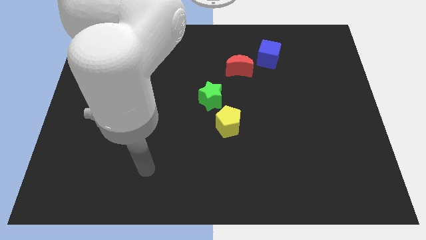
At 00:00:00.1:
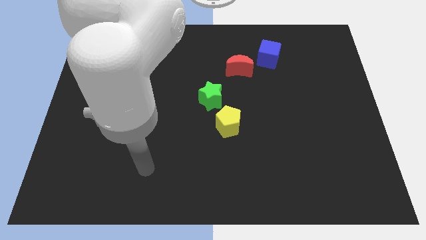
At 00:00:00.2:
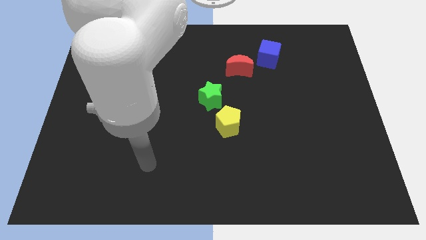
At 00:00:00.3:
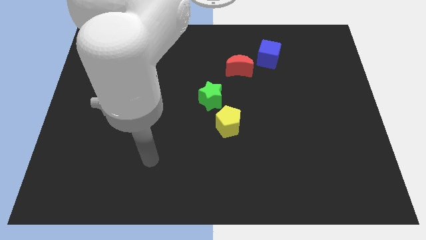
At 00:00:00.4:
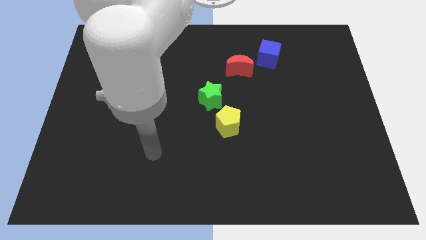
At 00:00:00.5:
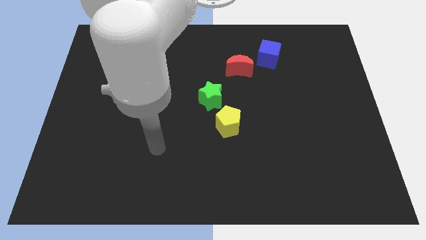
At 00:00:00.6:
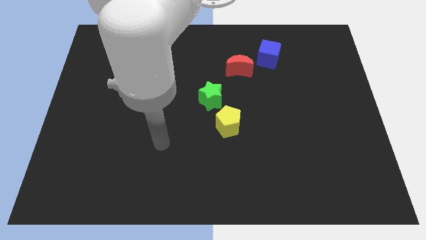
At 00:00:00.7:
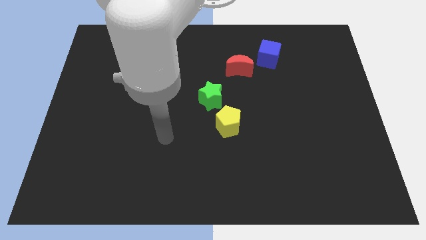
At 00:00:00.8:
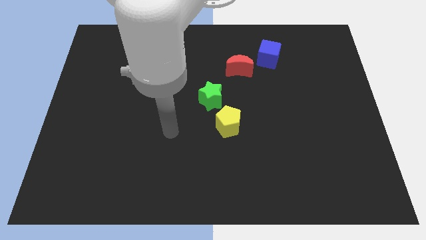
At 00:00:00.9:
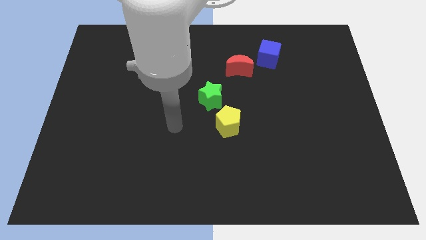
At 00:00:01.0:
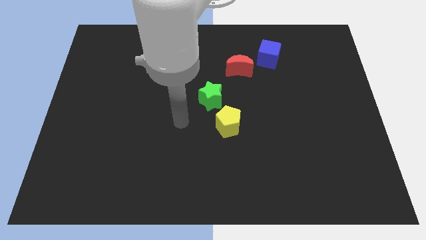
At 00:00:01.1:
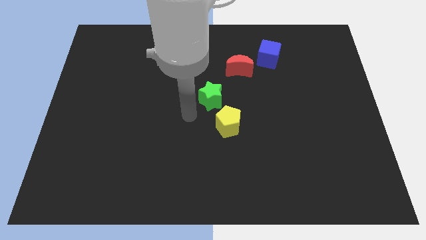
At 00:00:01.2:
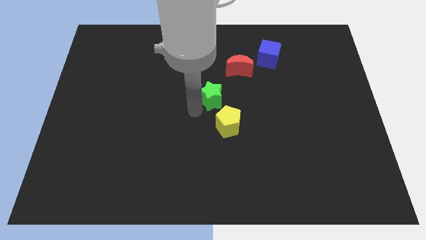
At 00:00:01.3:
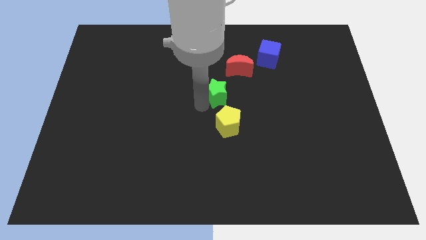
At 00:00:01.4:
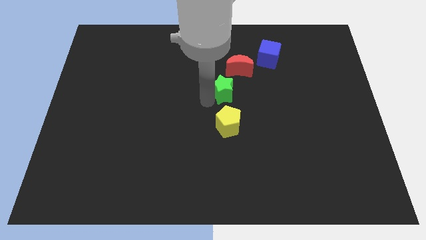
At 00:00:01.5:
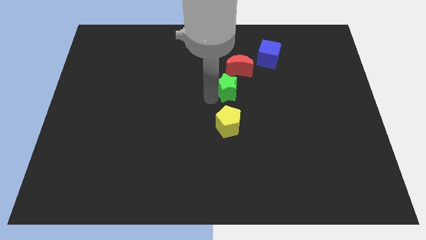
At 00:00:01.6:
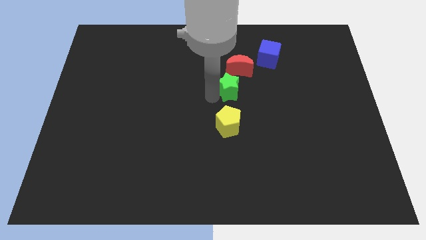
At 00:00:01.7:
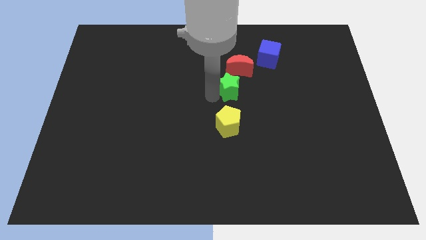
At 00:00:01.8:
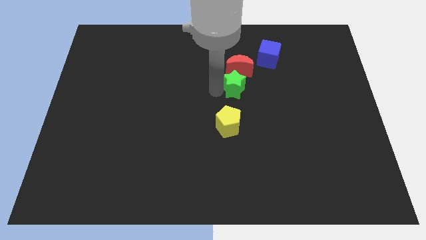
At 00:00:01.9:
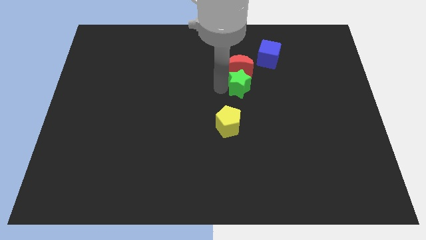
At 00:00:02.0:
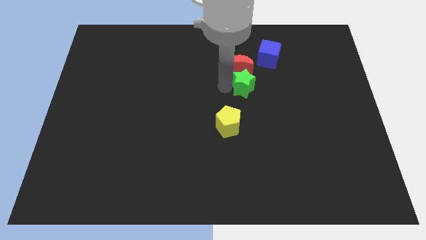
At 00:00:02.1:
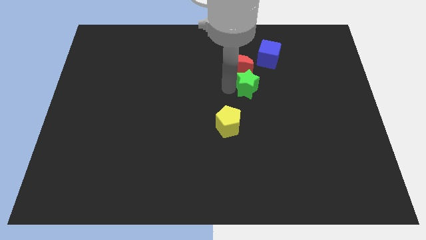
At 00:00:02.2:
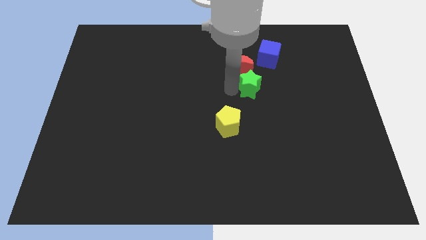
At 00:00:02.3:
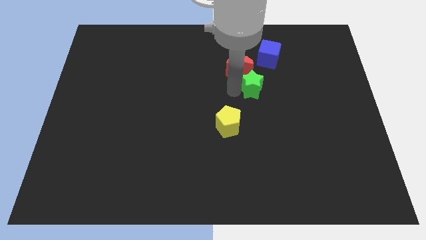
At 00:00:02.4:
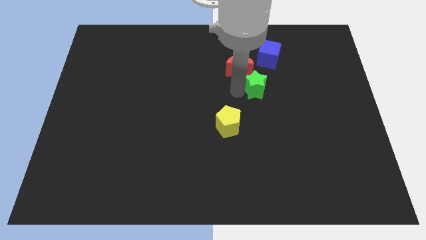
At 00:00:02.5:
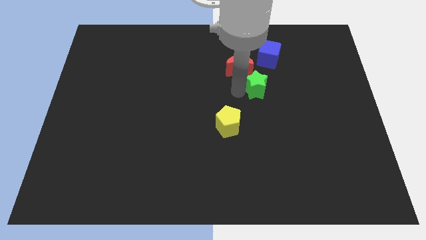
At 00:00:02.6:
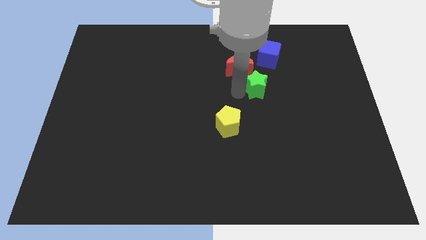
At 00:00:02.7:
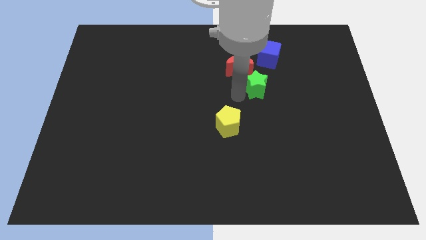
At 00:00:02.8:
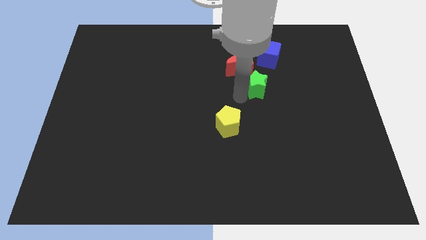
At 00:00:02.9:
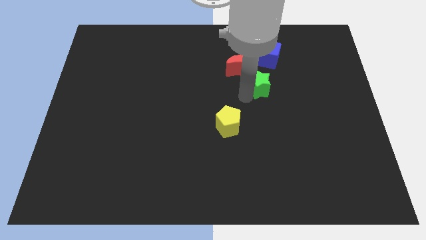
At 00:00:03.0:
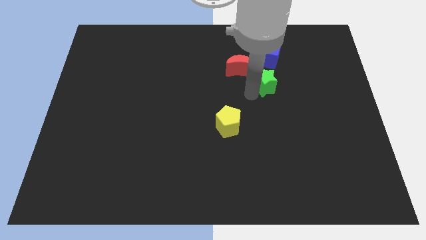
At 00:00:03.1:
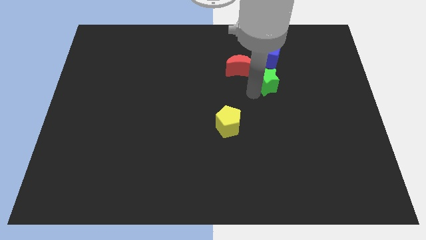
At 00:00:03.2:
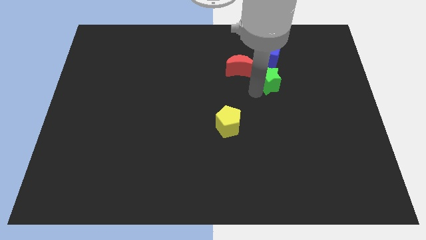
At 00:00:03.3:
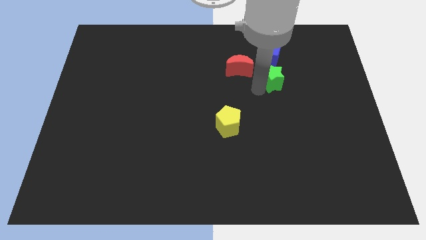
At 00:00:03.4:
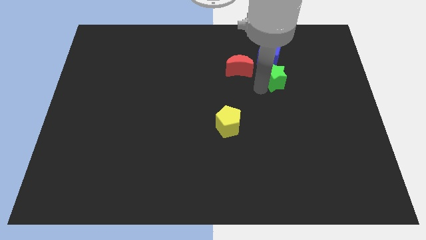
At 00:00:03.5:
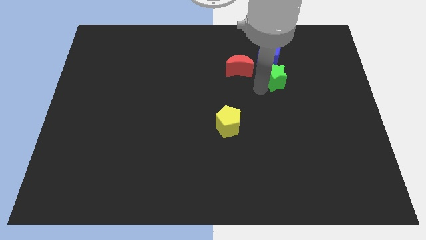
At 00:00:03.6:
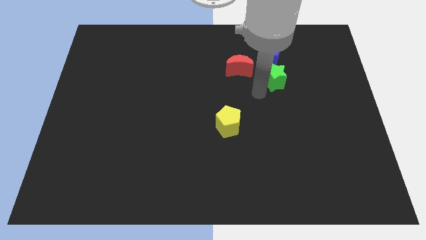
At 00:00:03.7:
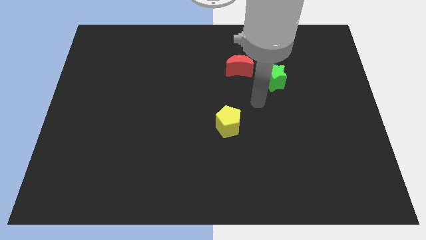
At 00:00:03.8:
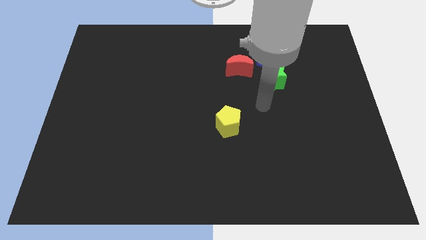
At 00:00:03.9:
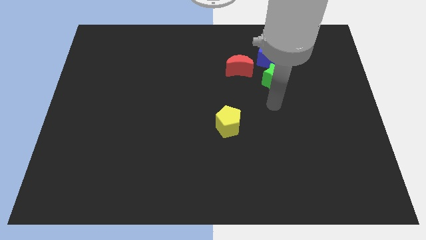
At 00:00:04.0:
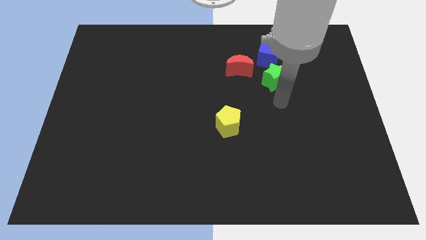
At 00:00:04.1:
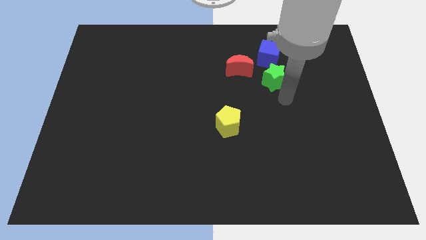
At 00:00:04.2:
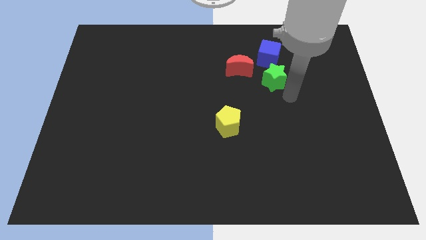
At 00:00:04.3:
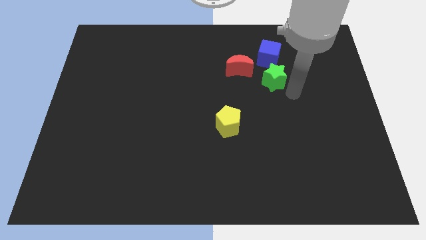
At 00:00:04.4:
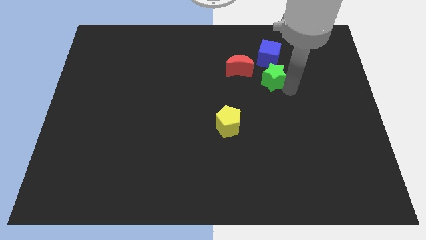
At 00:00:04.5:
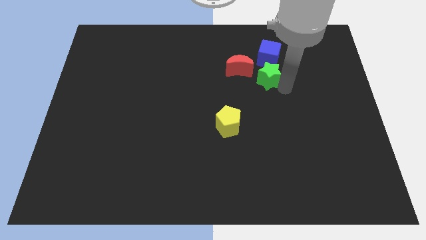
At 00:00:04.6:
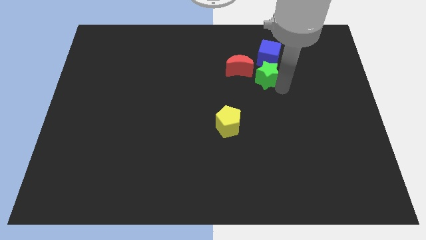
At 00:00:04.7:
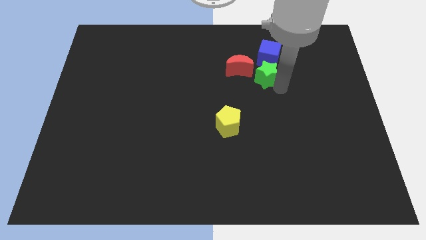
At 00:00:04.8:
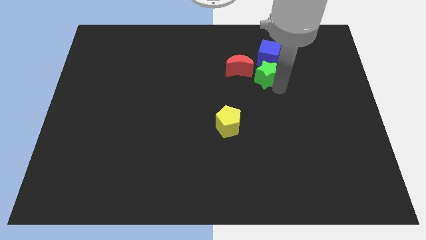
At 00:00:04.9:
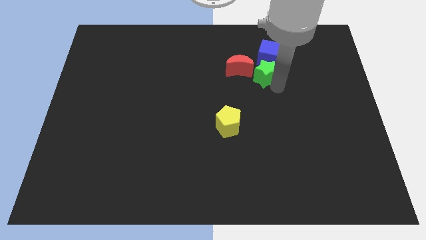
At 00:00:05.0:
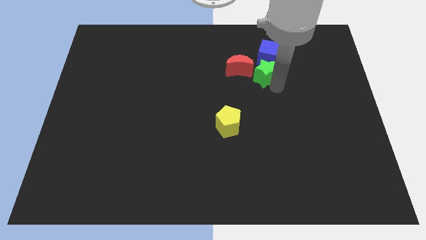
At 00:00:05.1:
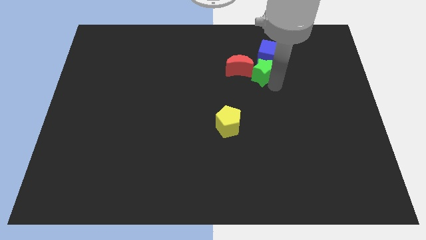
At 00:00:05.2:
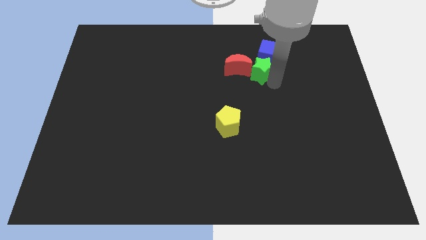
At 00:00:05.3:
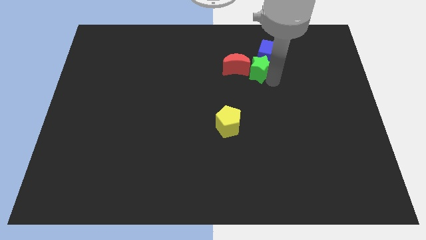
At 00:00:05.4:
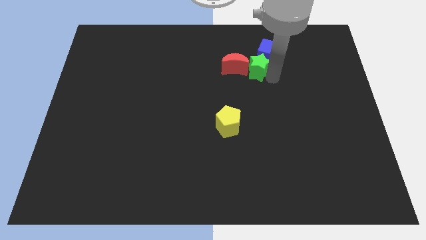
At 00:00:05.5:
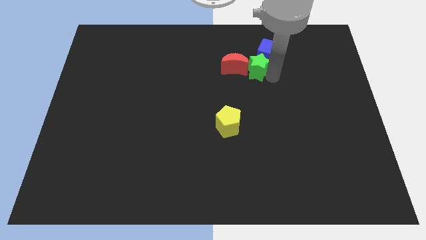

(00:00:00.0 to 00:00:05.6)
put the green block to the blue cube

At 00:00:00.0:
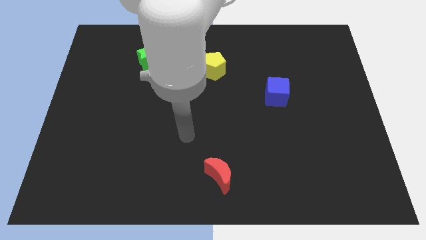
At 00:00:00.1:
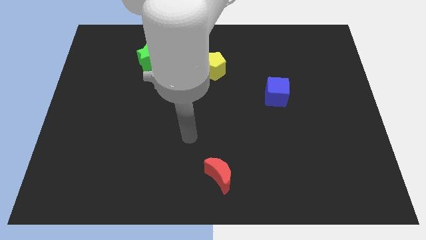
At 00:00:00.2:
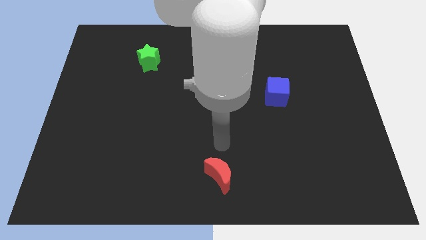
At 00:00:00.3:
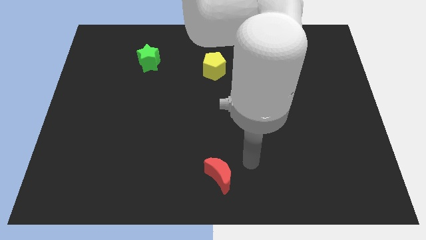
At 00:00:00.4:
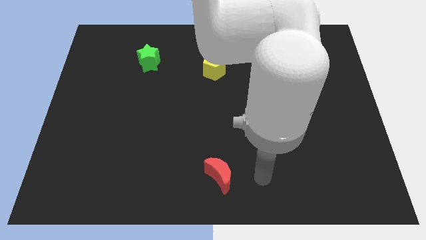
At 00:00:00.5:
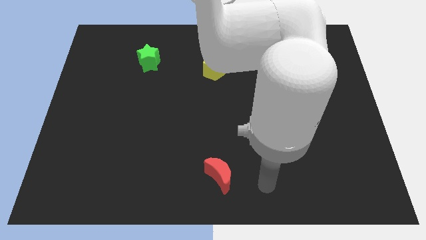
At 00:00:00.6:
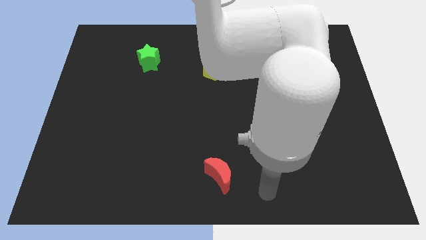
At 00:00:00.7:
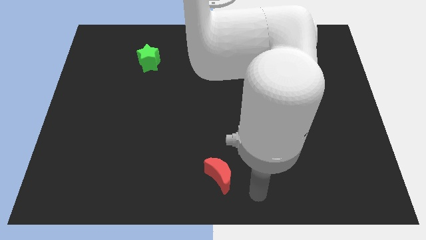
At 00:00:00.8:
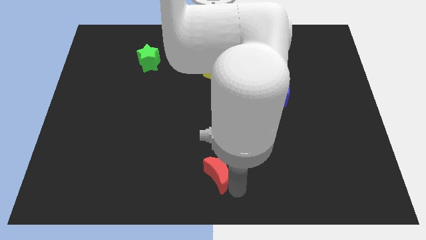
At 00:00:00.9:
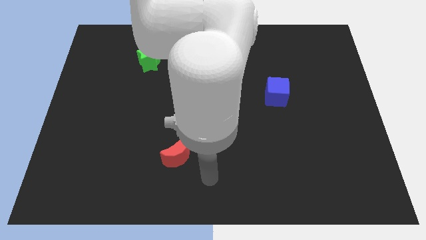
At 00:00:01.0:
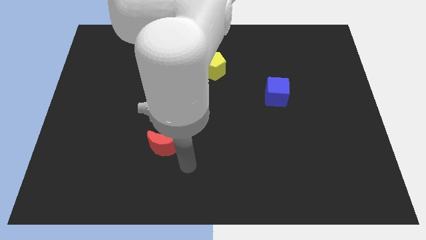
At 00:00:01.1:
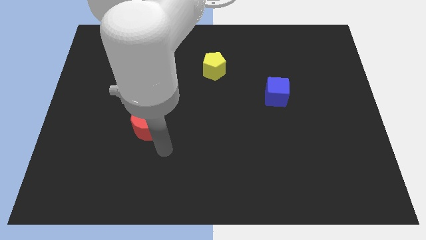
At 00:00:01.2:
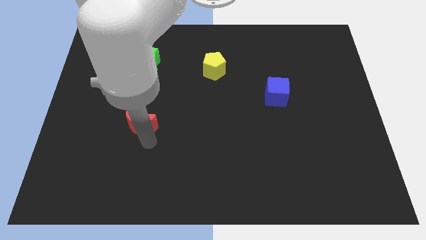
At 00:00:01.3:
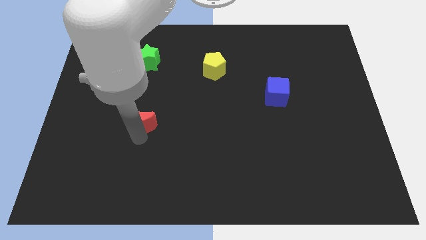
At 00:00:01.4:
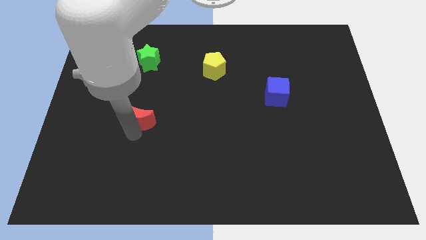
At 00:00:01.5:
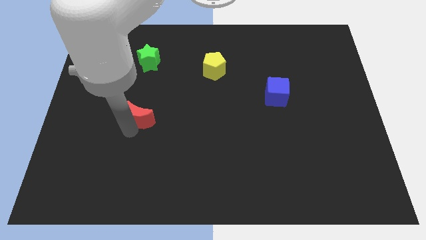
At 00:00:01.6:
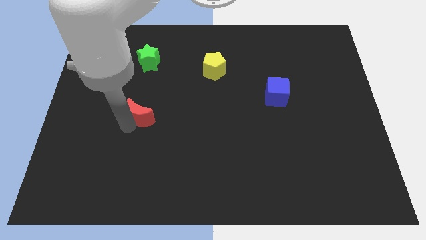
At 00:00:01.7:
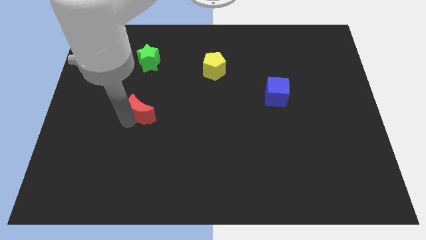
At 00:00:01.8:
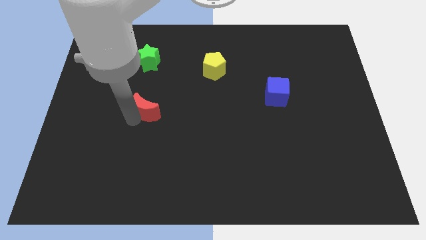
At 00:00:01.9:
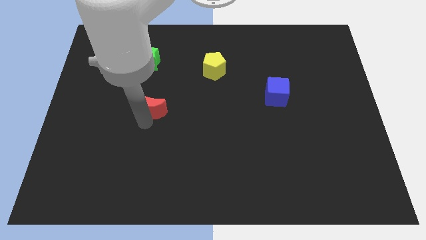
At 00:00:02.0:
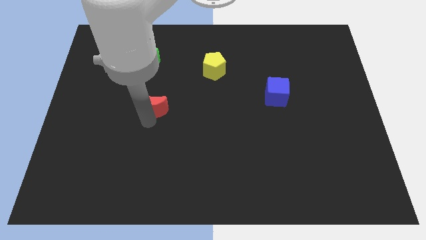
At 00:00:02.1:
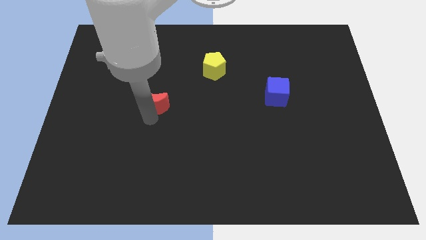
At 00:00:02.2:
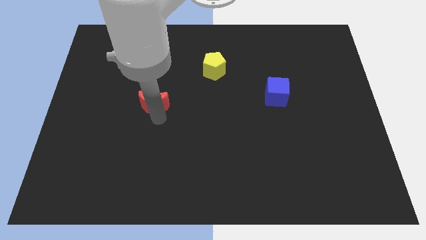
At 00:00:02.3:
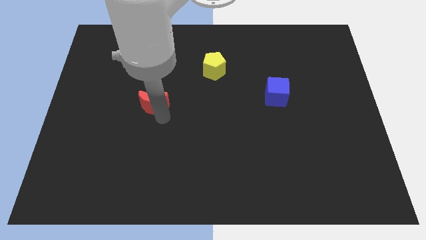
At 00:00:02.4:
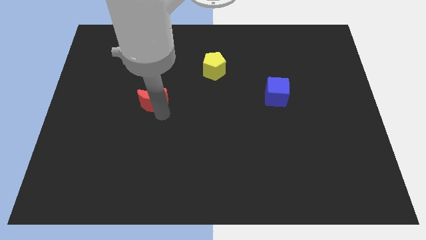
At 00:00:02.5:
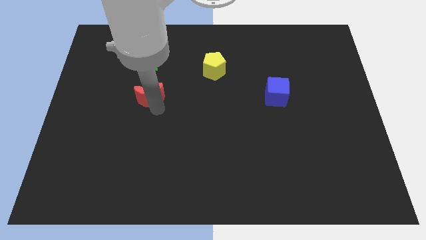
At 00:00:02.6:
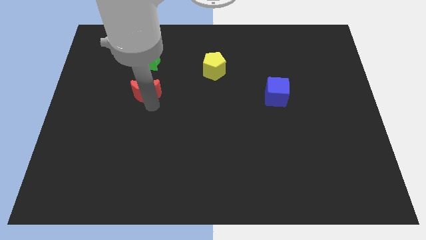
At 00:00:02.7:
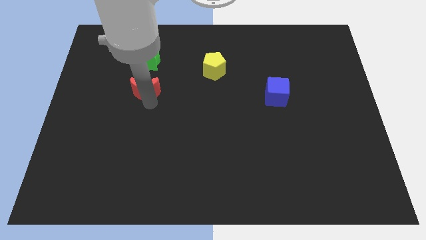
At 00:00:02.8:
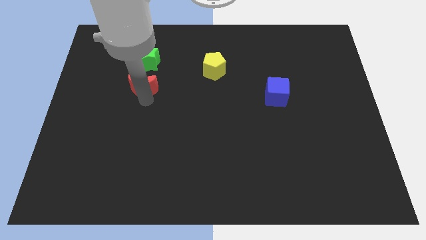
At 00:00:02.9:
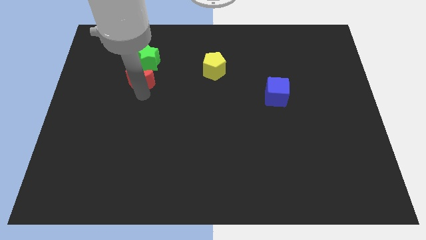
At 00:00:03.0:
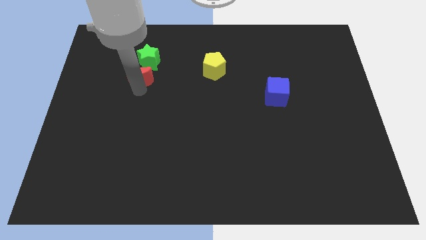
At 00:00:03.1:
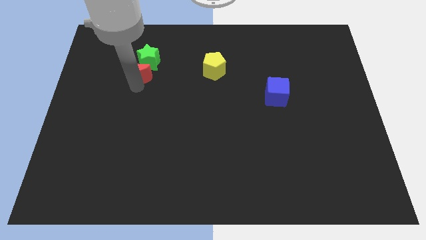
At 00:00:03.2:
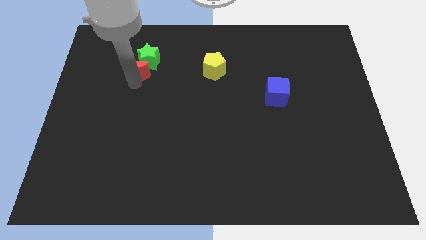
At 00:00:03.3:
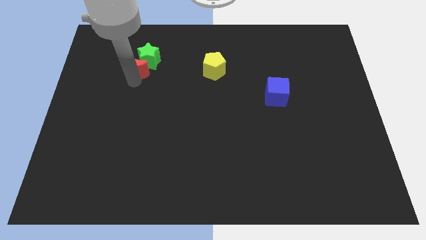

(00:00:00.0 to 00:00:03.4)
push the moon to the green block
